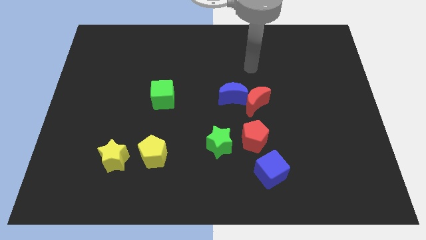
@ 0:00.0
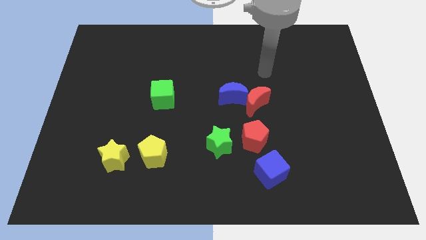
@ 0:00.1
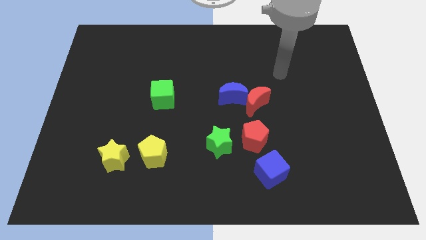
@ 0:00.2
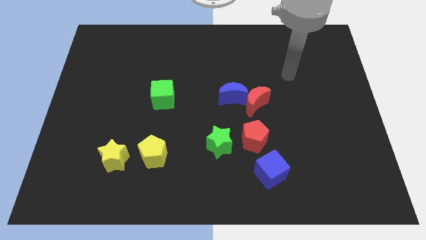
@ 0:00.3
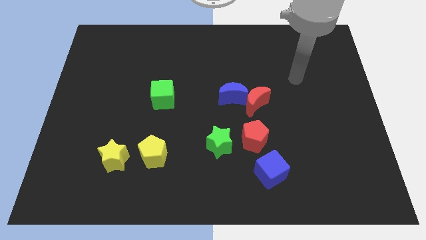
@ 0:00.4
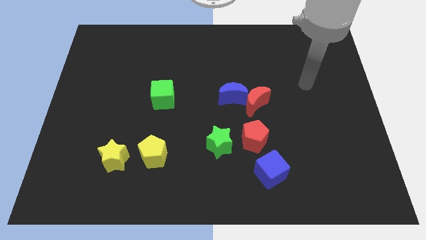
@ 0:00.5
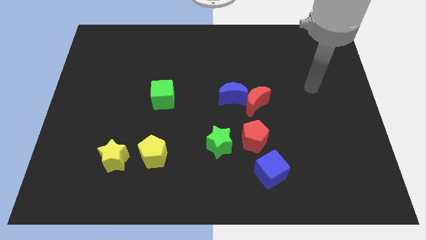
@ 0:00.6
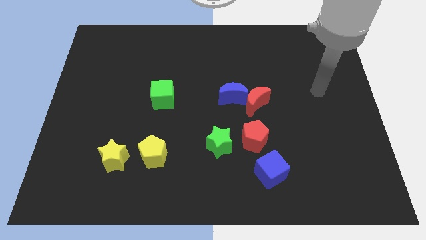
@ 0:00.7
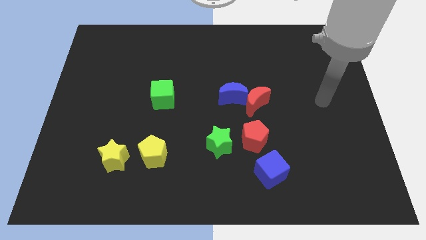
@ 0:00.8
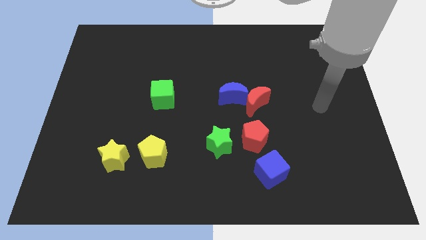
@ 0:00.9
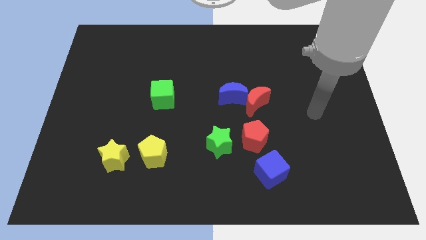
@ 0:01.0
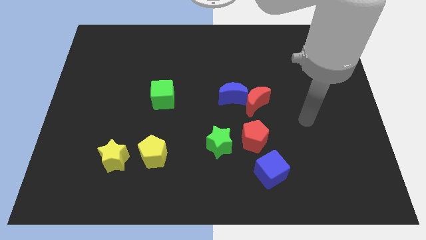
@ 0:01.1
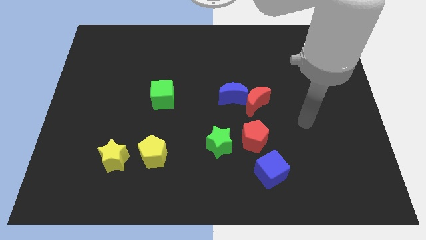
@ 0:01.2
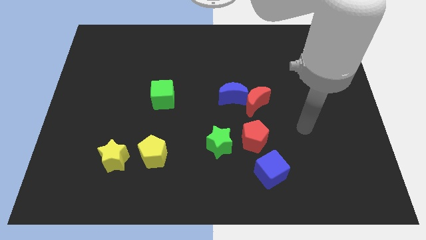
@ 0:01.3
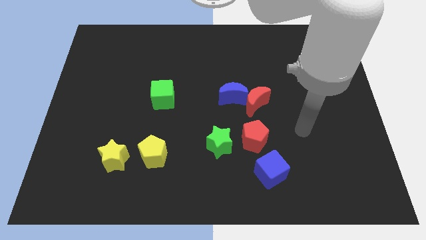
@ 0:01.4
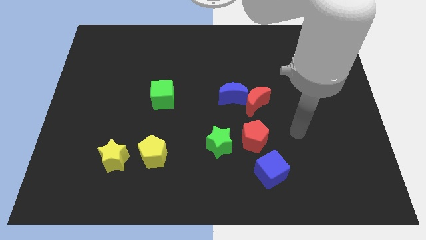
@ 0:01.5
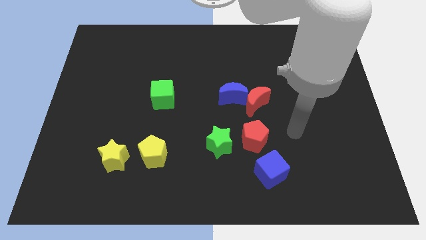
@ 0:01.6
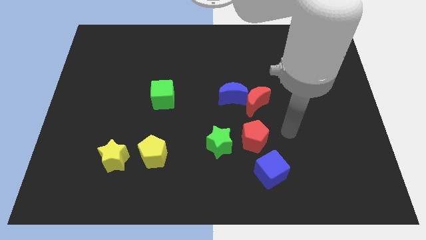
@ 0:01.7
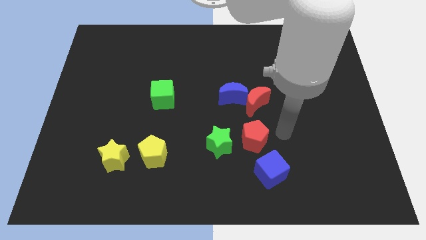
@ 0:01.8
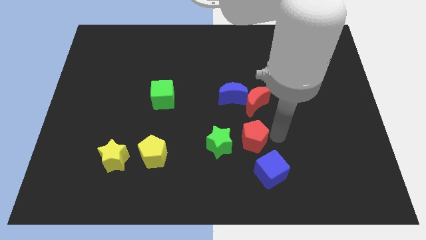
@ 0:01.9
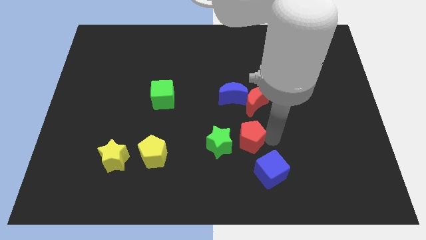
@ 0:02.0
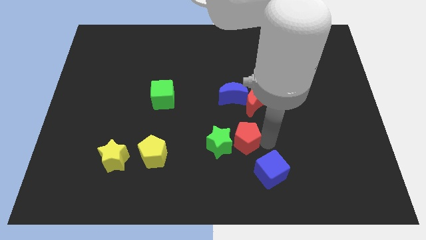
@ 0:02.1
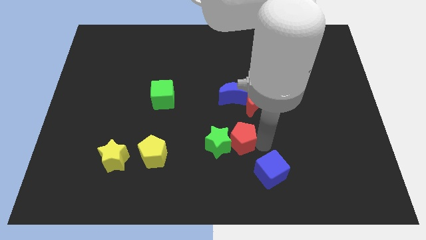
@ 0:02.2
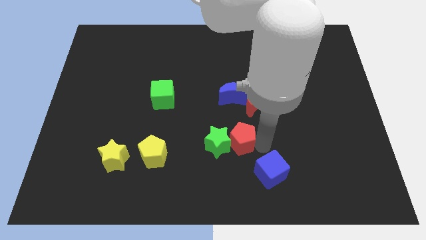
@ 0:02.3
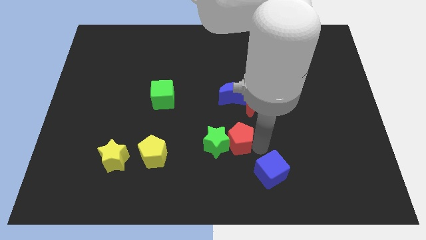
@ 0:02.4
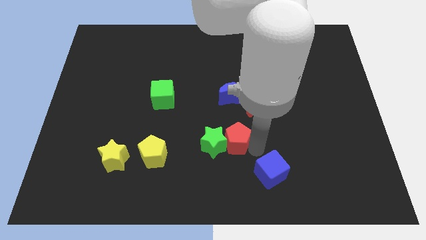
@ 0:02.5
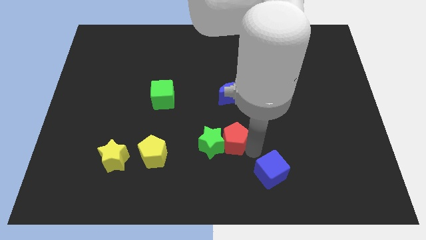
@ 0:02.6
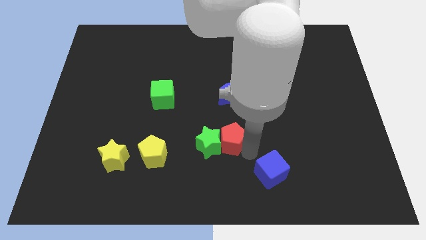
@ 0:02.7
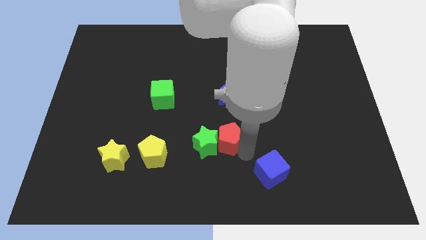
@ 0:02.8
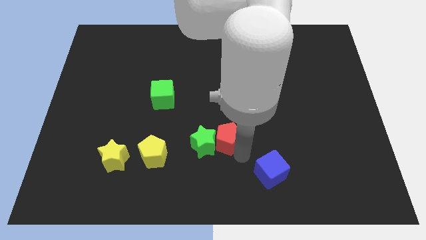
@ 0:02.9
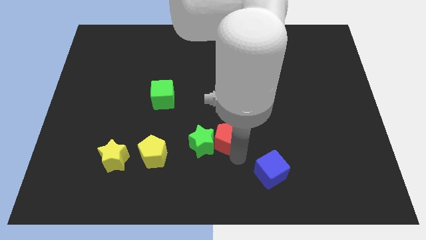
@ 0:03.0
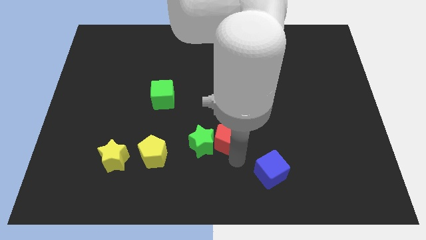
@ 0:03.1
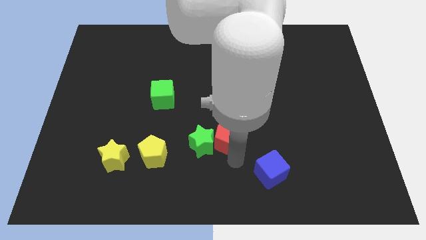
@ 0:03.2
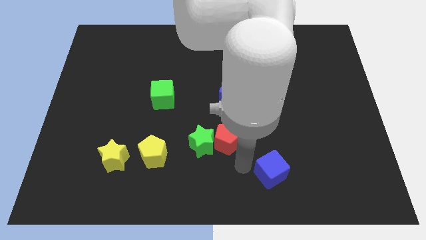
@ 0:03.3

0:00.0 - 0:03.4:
push the red pentagon into the green star

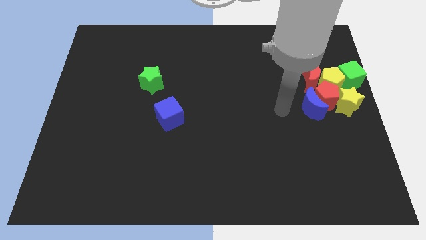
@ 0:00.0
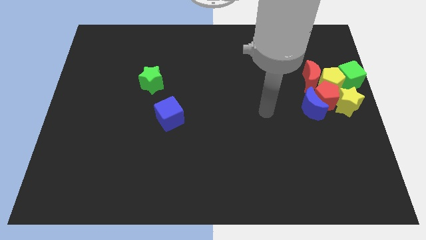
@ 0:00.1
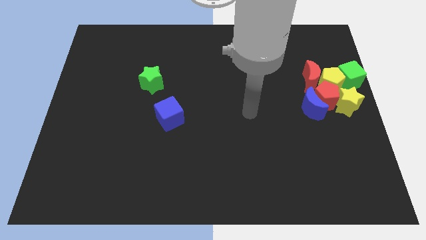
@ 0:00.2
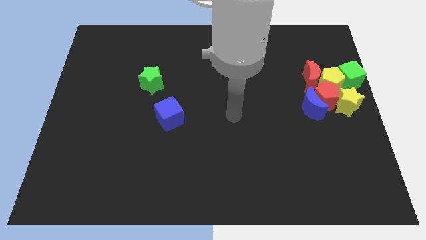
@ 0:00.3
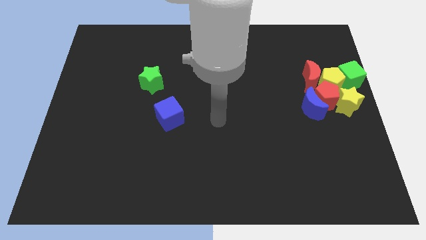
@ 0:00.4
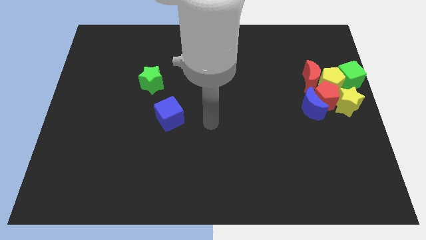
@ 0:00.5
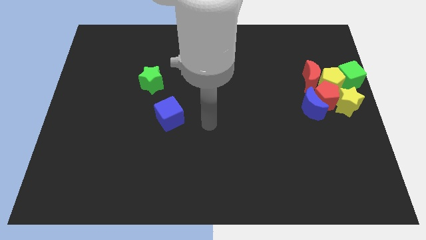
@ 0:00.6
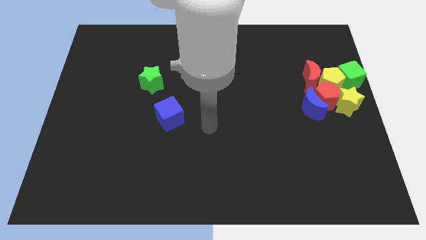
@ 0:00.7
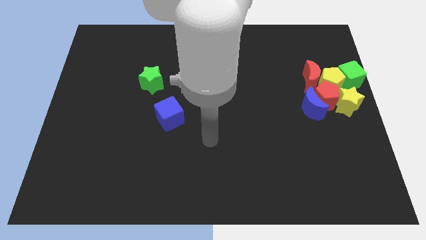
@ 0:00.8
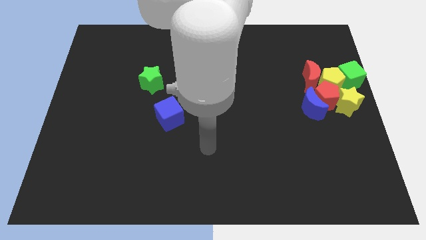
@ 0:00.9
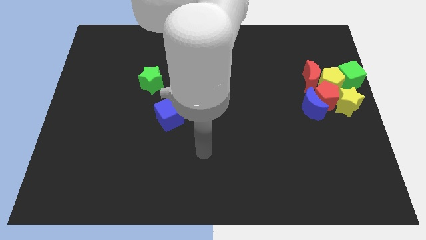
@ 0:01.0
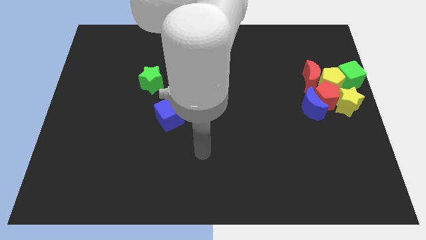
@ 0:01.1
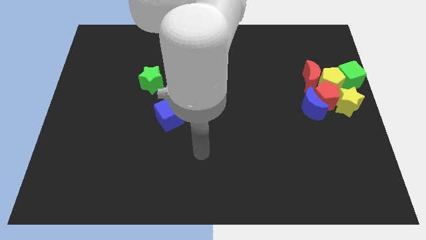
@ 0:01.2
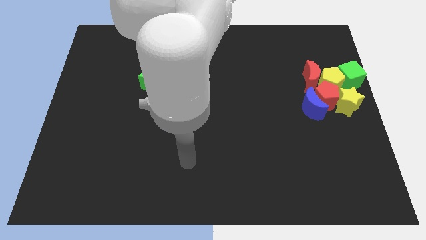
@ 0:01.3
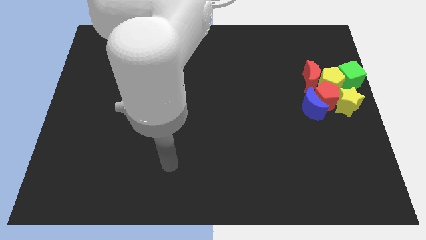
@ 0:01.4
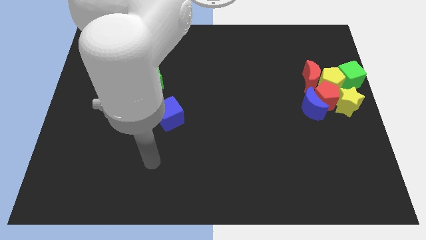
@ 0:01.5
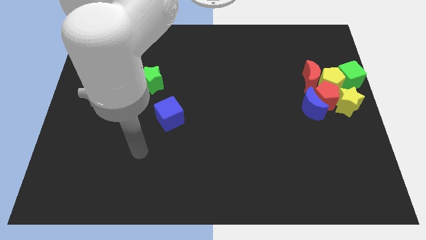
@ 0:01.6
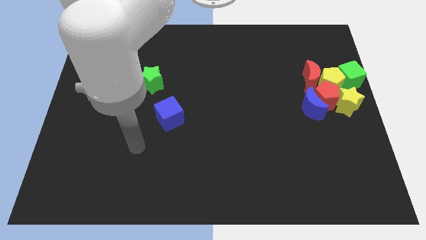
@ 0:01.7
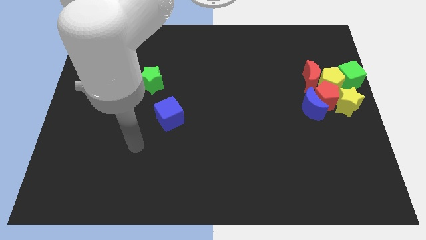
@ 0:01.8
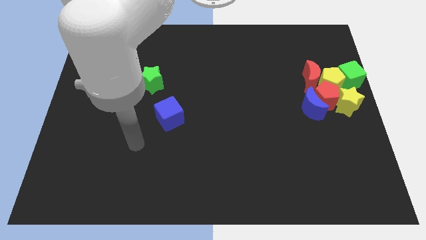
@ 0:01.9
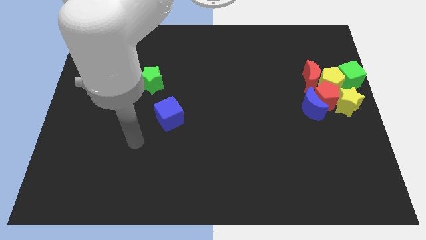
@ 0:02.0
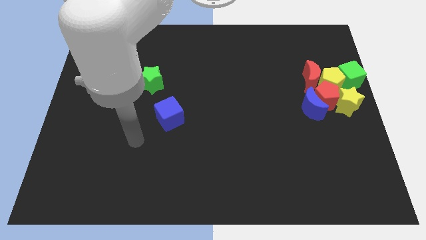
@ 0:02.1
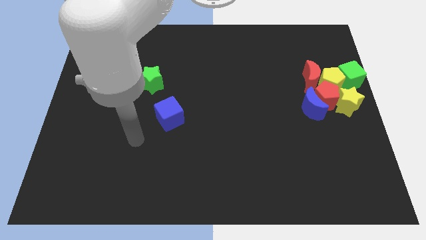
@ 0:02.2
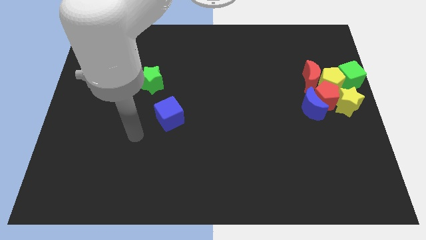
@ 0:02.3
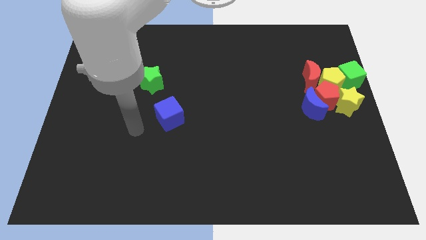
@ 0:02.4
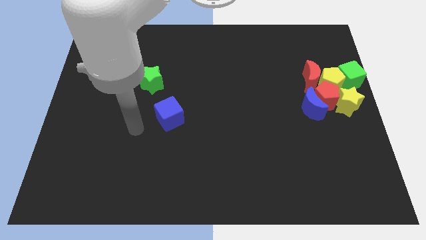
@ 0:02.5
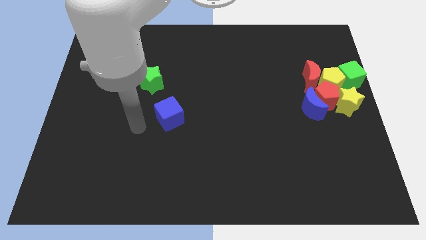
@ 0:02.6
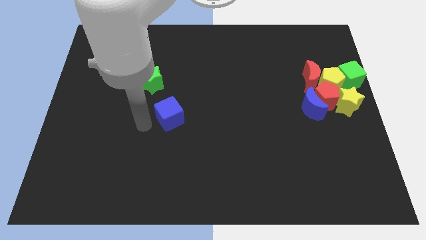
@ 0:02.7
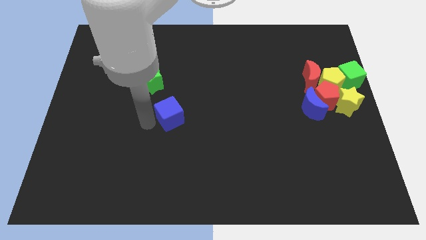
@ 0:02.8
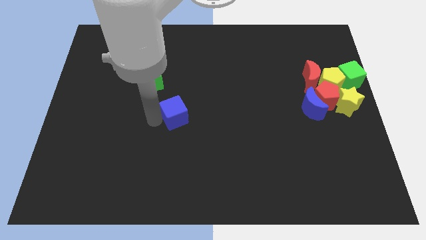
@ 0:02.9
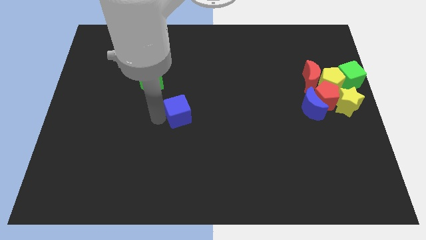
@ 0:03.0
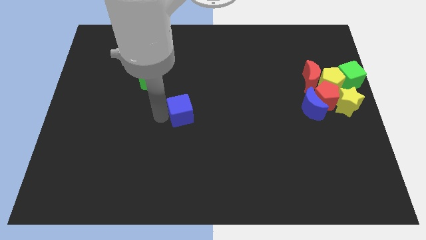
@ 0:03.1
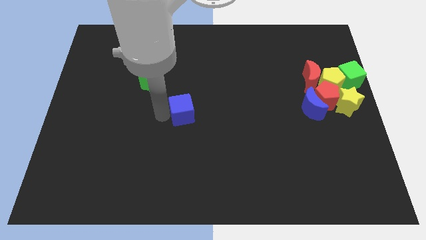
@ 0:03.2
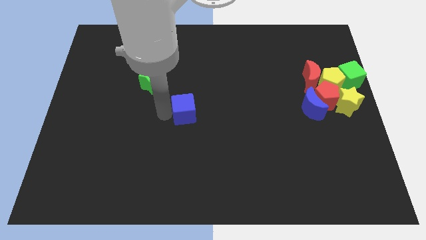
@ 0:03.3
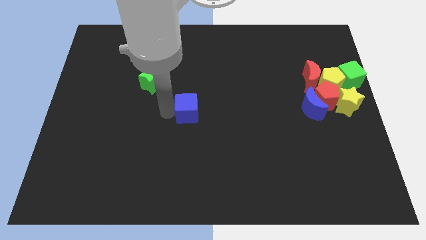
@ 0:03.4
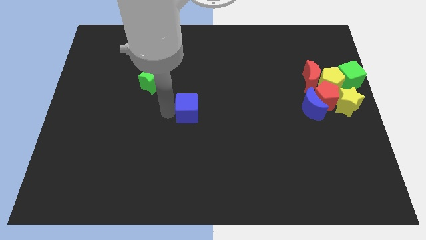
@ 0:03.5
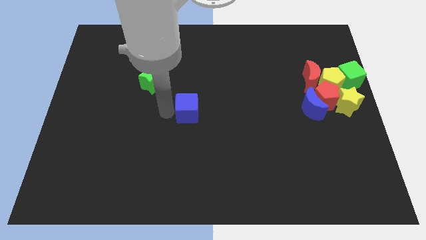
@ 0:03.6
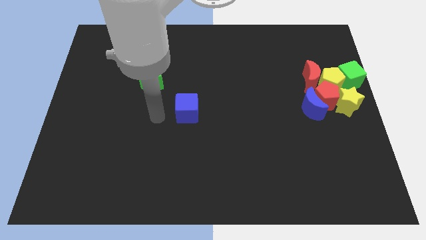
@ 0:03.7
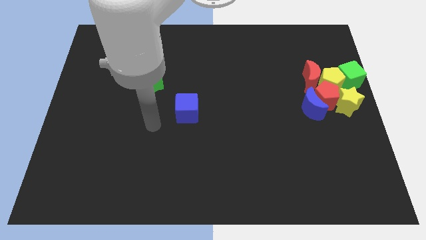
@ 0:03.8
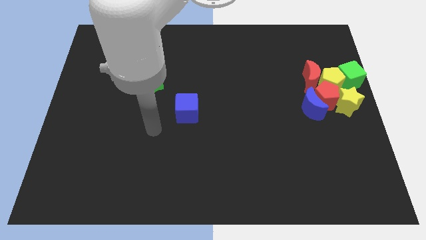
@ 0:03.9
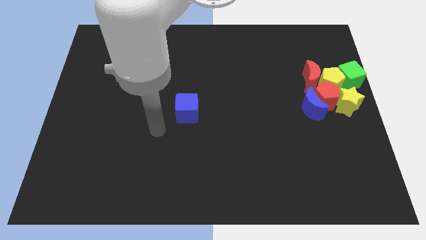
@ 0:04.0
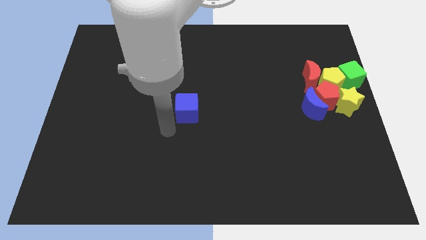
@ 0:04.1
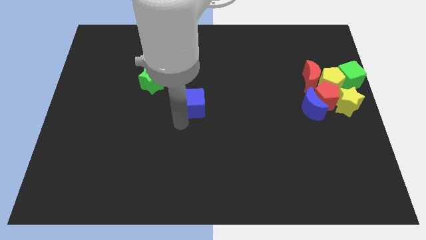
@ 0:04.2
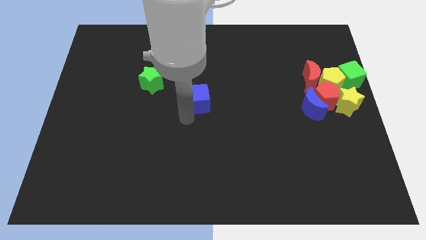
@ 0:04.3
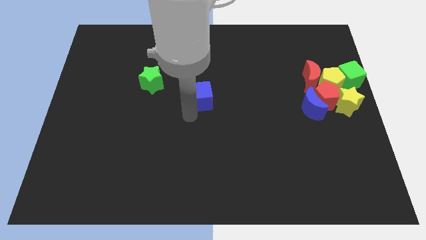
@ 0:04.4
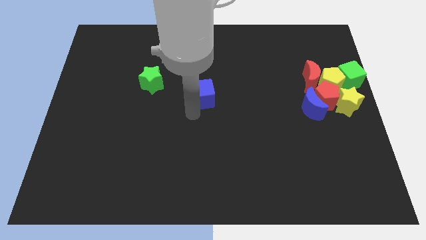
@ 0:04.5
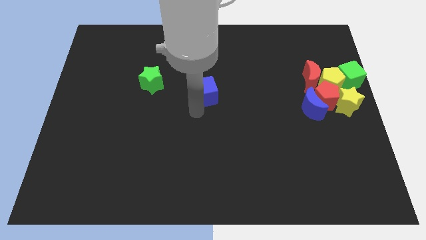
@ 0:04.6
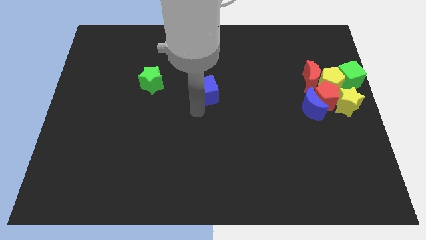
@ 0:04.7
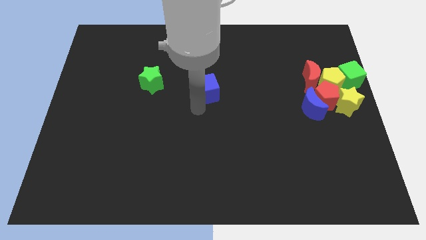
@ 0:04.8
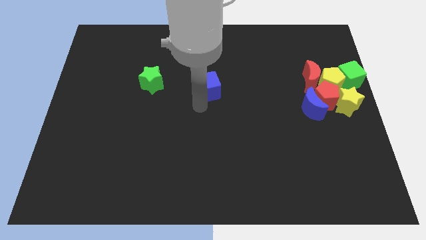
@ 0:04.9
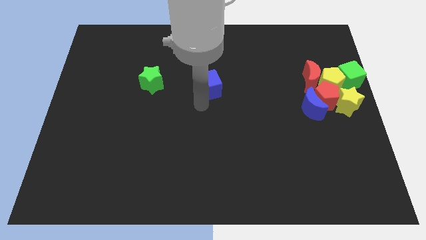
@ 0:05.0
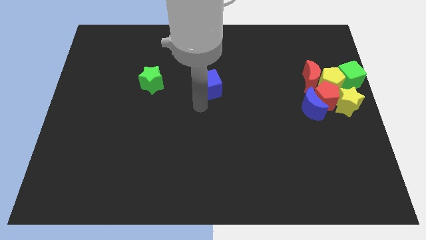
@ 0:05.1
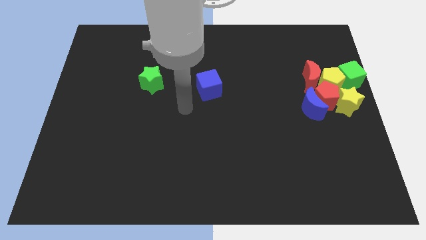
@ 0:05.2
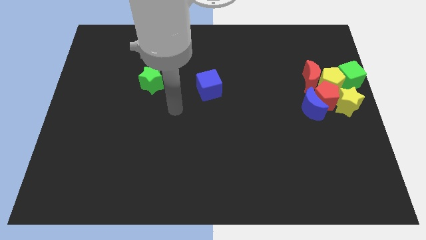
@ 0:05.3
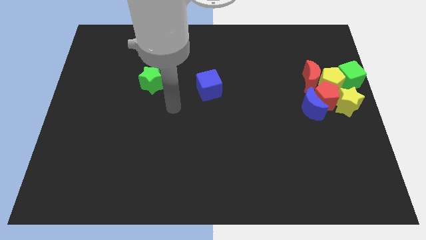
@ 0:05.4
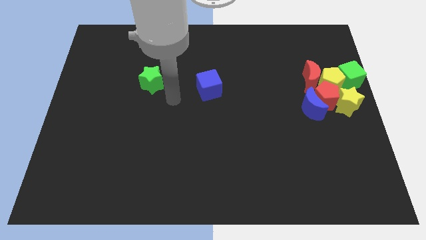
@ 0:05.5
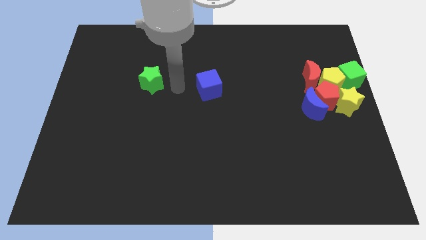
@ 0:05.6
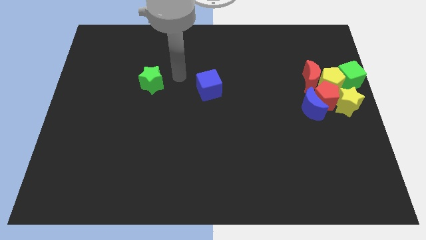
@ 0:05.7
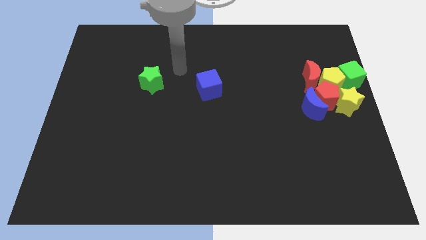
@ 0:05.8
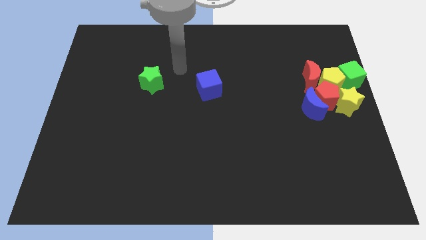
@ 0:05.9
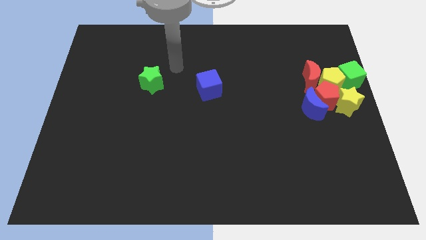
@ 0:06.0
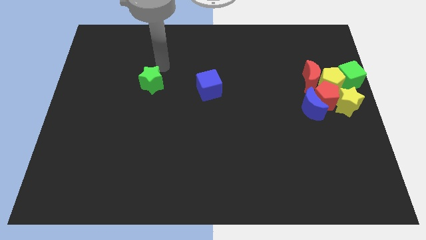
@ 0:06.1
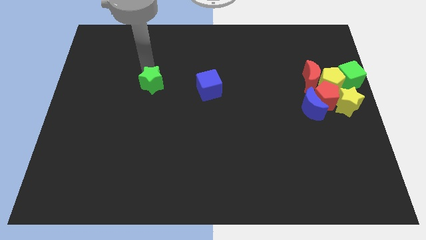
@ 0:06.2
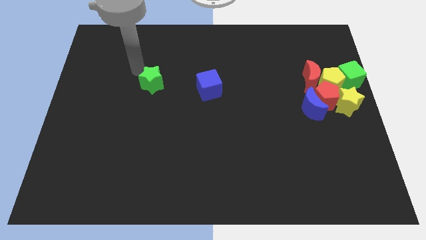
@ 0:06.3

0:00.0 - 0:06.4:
move the blue cube to the right side of the green star
